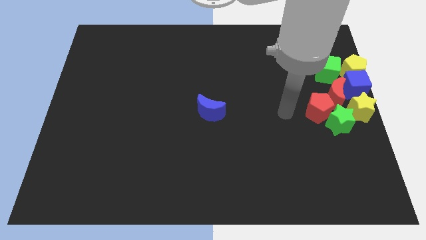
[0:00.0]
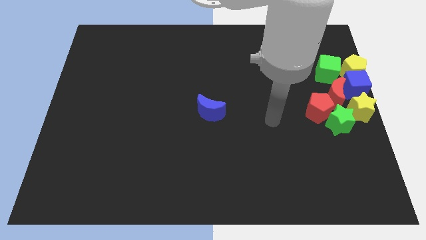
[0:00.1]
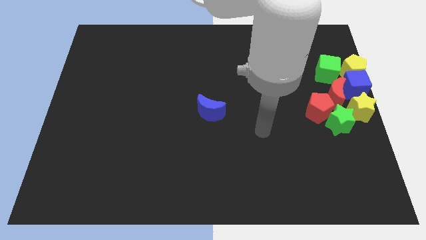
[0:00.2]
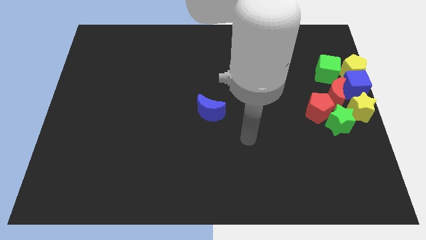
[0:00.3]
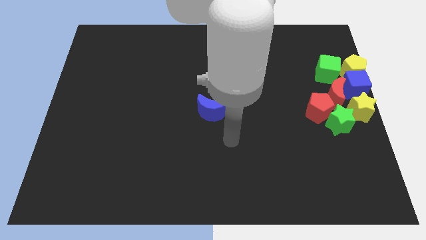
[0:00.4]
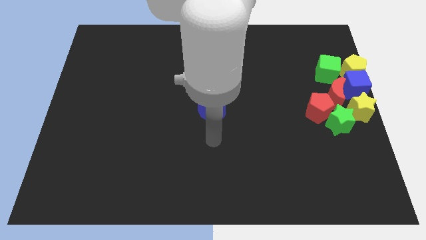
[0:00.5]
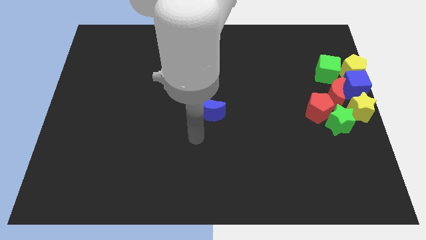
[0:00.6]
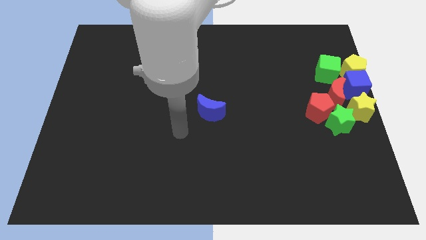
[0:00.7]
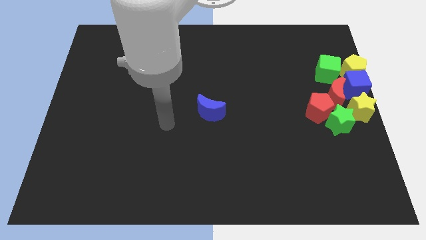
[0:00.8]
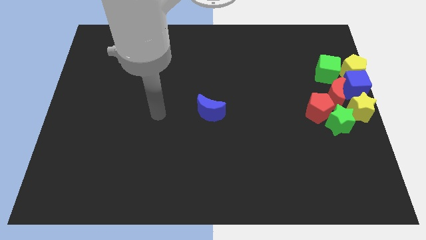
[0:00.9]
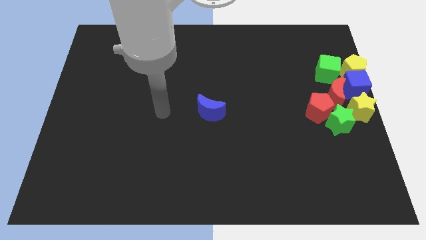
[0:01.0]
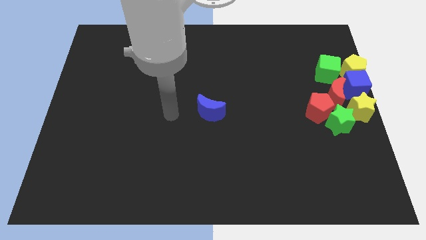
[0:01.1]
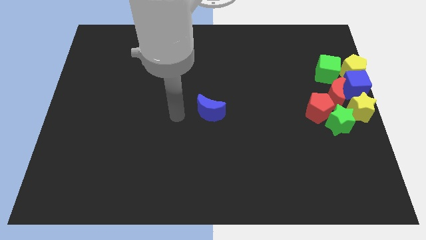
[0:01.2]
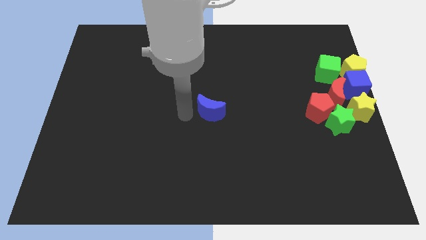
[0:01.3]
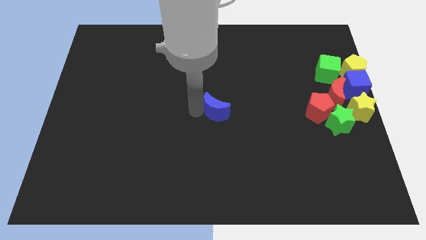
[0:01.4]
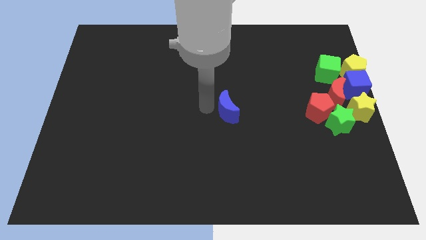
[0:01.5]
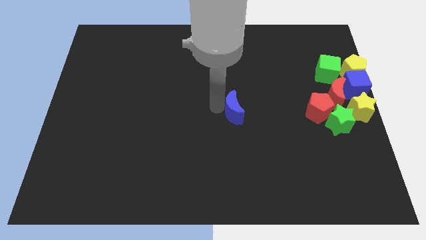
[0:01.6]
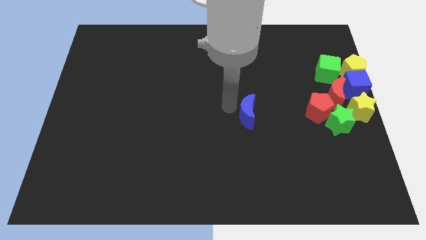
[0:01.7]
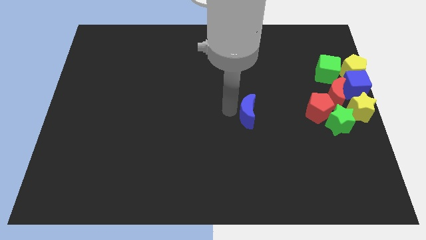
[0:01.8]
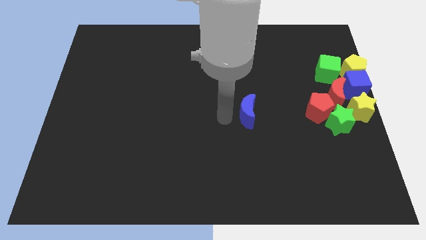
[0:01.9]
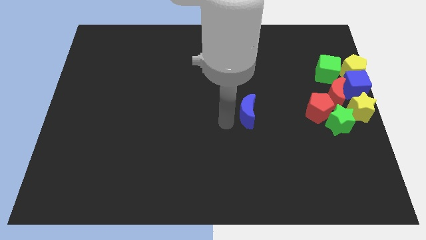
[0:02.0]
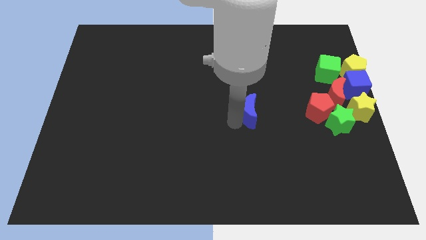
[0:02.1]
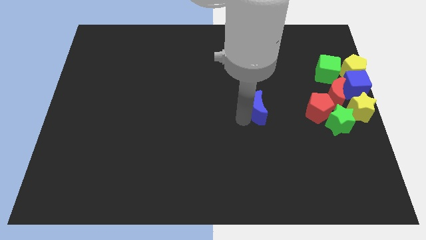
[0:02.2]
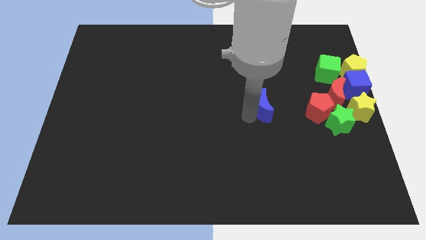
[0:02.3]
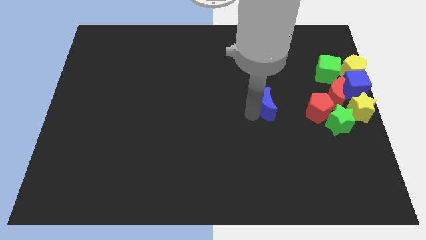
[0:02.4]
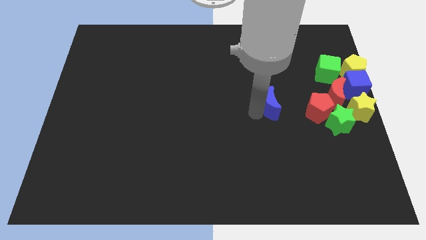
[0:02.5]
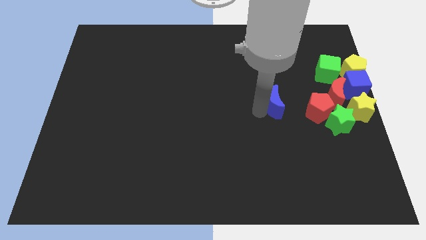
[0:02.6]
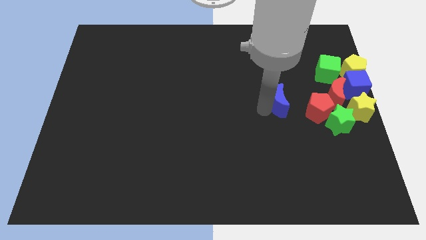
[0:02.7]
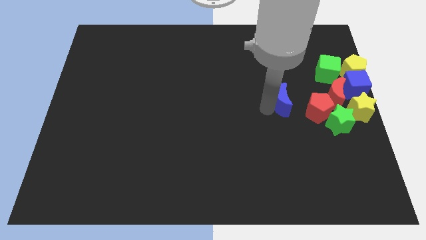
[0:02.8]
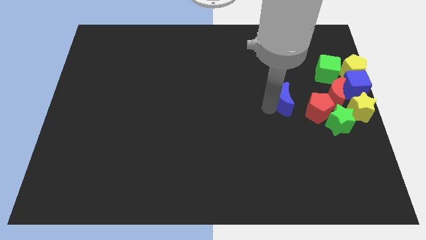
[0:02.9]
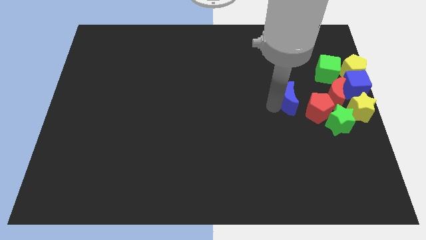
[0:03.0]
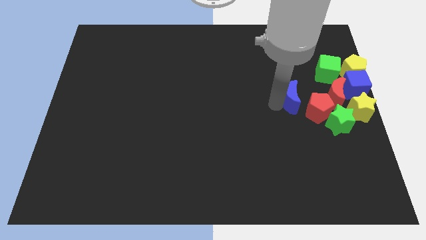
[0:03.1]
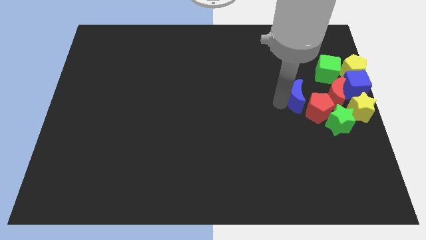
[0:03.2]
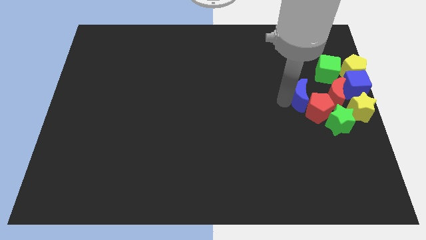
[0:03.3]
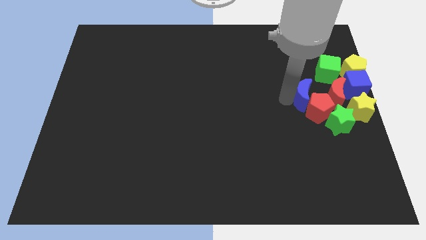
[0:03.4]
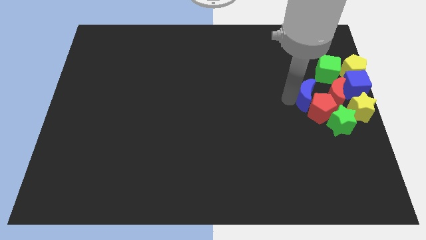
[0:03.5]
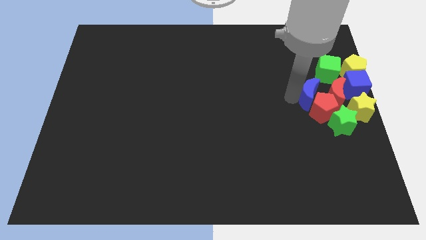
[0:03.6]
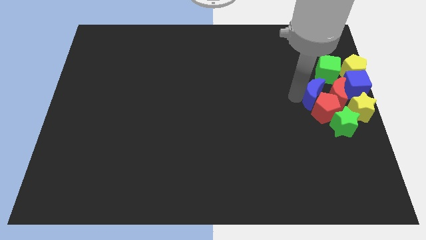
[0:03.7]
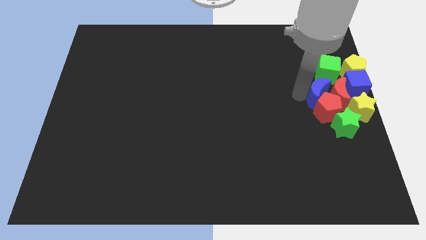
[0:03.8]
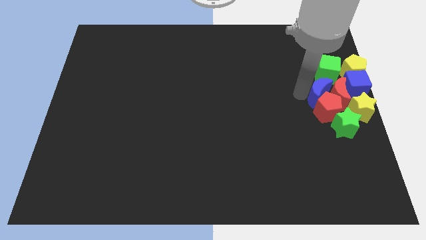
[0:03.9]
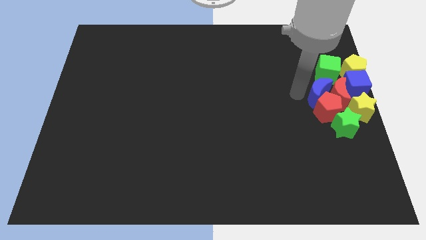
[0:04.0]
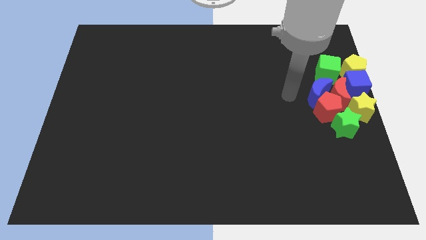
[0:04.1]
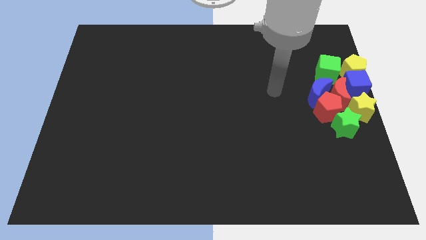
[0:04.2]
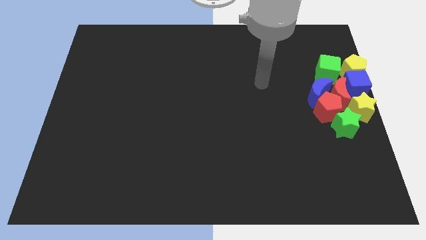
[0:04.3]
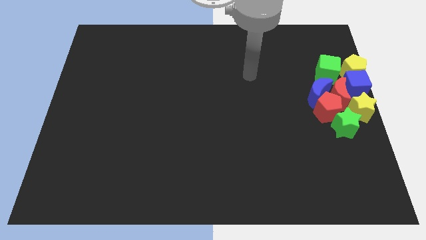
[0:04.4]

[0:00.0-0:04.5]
move the blue crescent to the group of blocks

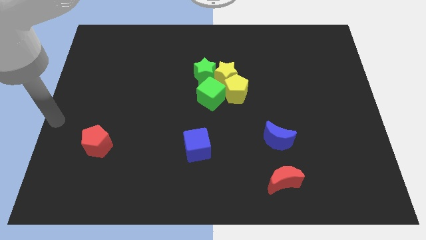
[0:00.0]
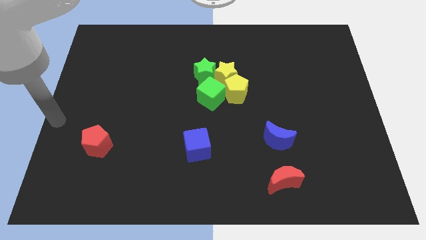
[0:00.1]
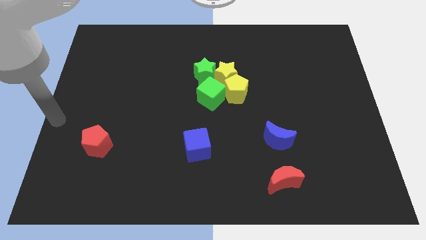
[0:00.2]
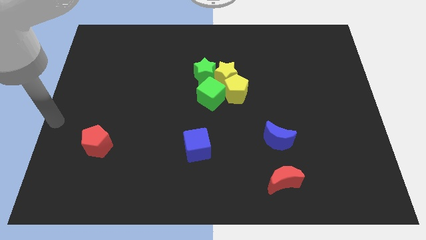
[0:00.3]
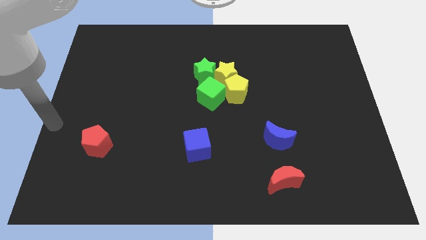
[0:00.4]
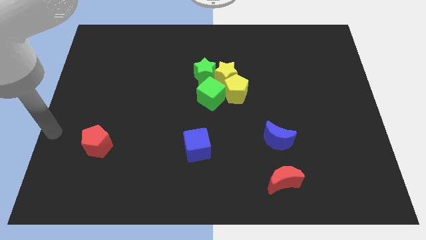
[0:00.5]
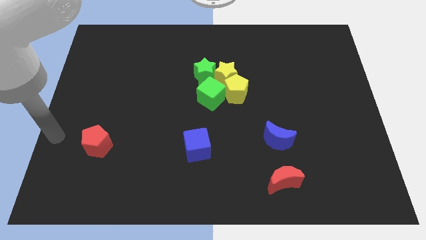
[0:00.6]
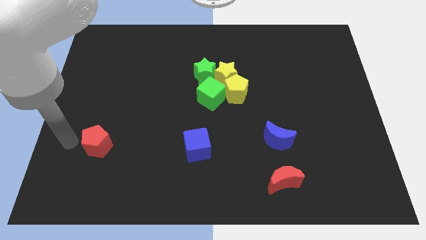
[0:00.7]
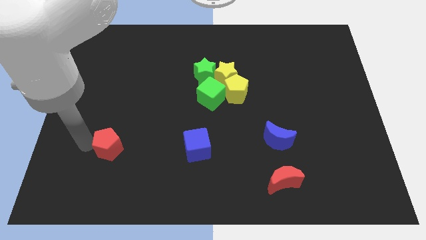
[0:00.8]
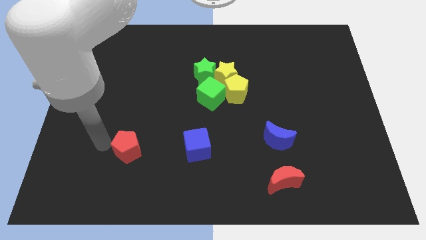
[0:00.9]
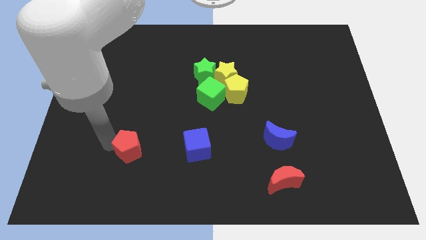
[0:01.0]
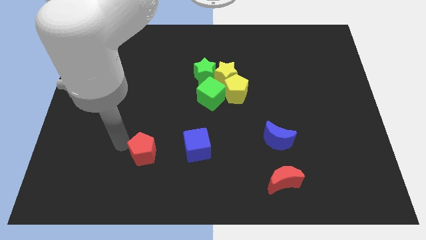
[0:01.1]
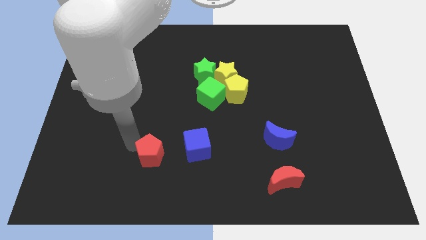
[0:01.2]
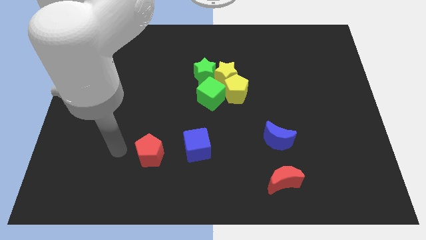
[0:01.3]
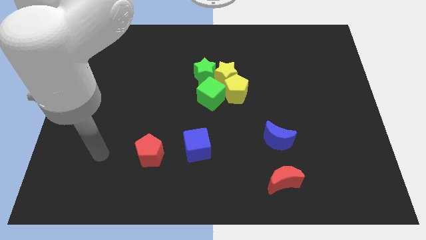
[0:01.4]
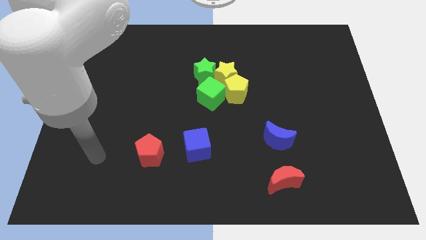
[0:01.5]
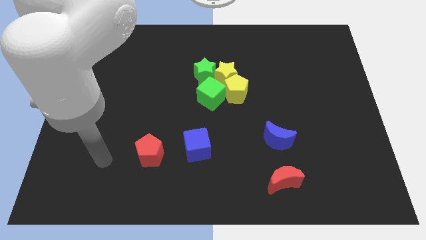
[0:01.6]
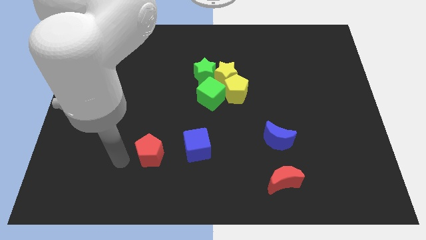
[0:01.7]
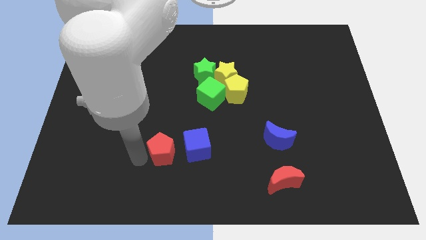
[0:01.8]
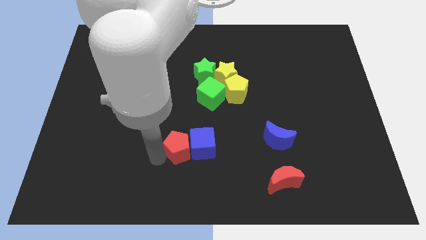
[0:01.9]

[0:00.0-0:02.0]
push the red pentagon towards the blue cube

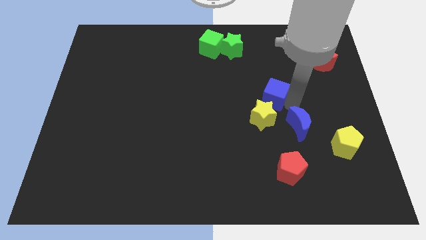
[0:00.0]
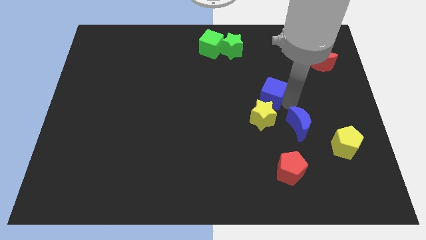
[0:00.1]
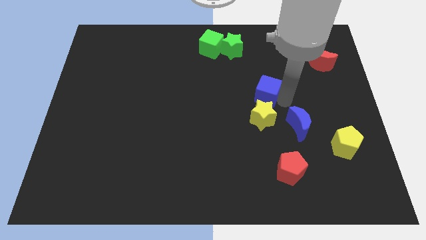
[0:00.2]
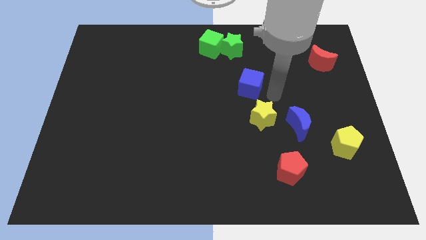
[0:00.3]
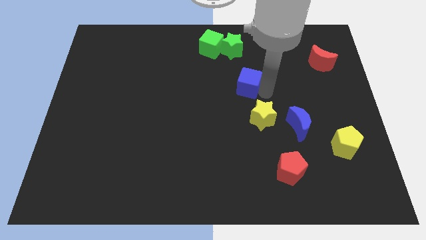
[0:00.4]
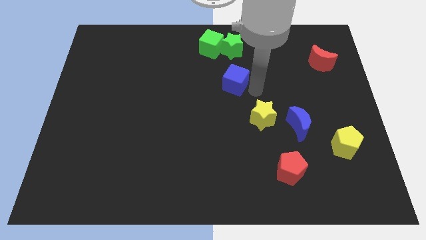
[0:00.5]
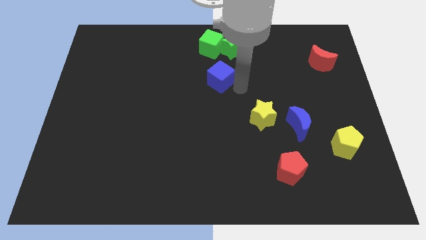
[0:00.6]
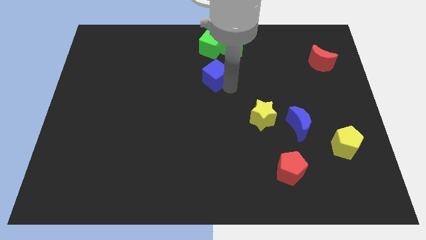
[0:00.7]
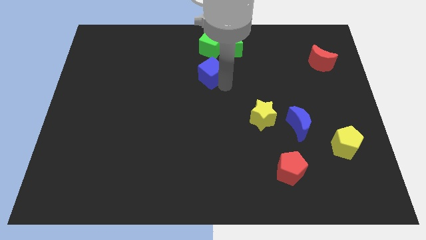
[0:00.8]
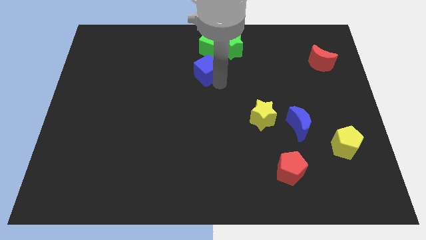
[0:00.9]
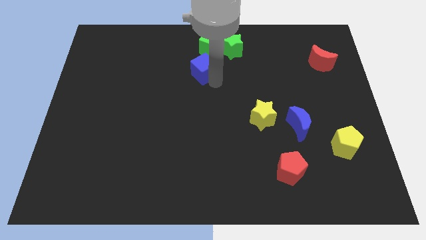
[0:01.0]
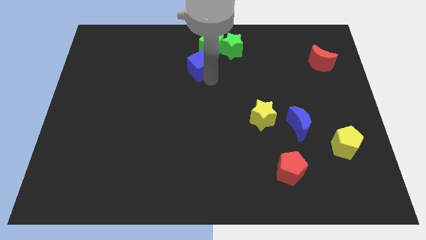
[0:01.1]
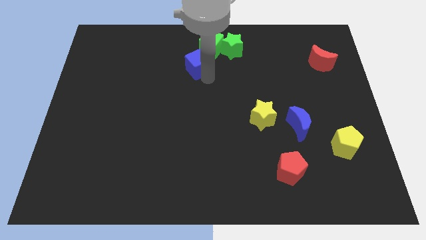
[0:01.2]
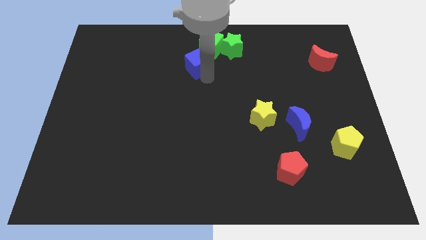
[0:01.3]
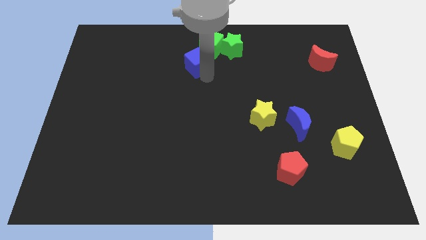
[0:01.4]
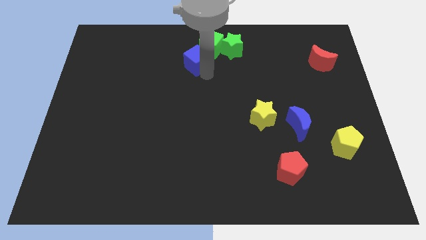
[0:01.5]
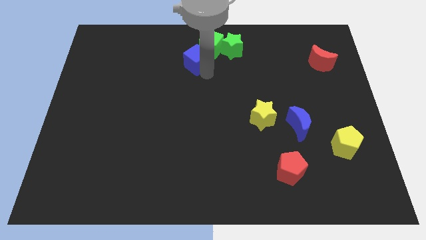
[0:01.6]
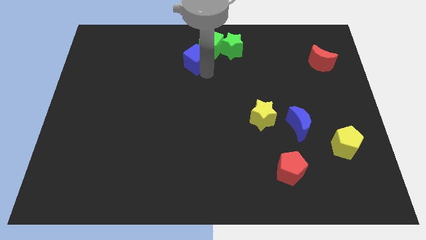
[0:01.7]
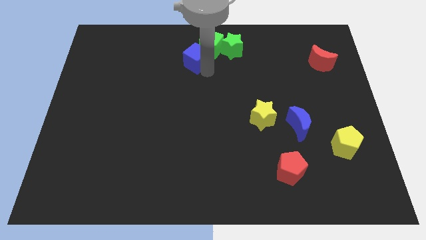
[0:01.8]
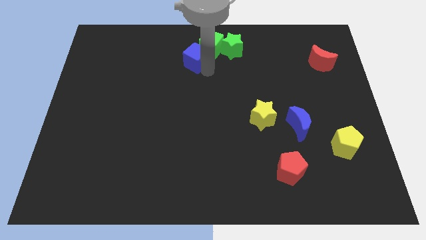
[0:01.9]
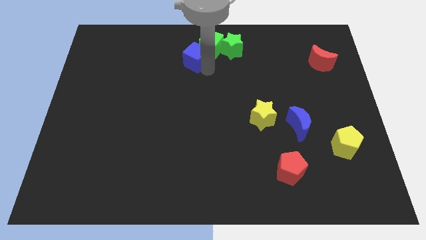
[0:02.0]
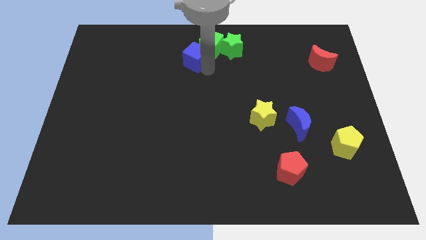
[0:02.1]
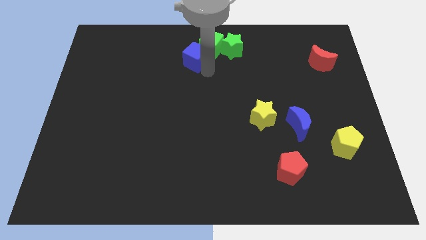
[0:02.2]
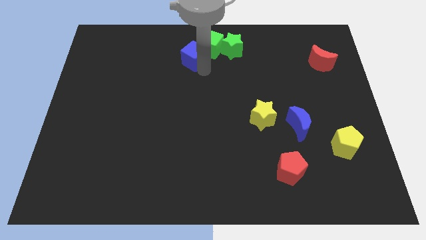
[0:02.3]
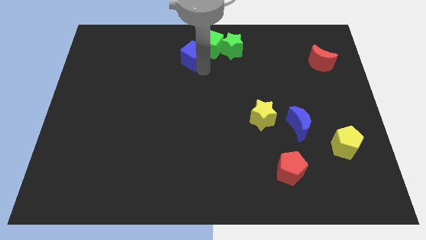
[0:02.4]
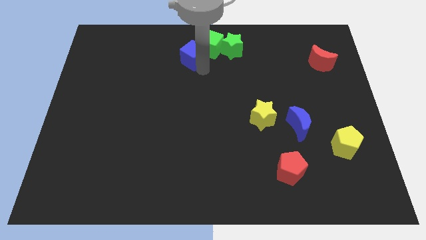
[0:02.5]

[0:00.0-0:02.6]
place blue cube bottom left of the green cube
